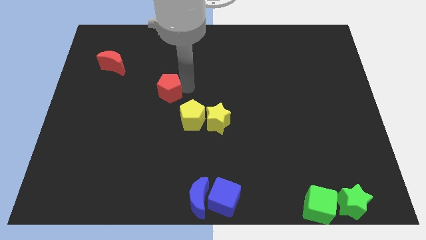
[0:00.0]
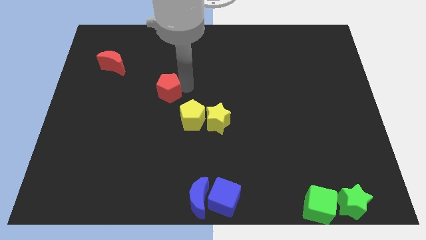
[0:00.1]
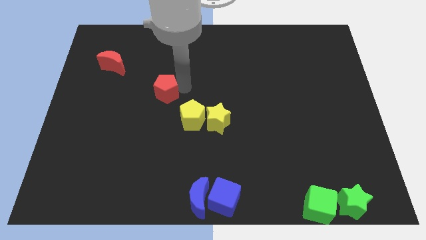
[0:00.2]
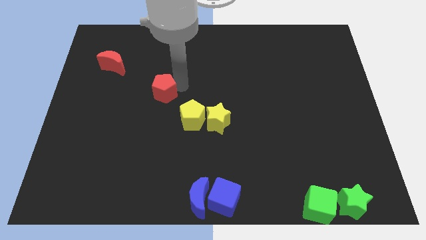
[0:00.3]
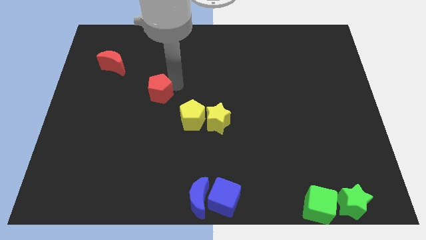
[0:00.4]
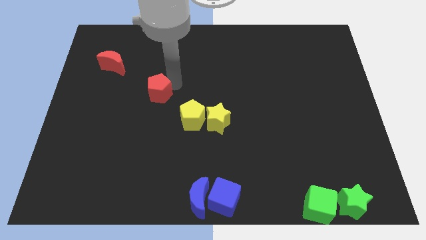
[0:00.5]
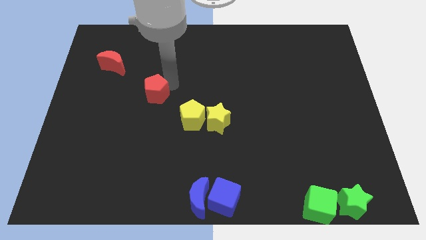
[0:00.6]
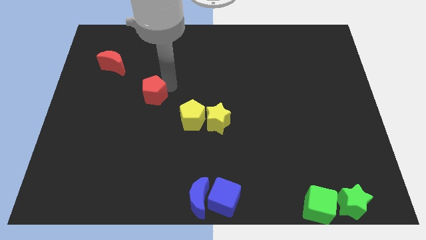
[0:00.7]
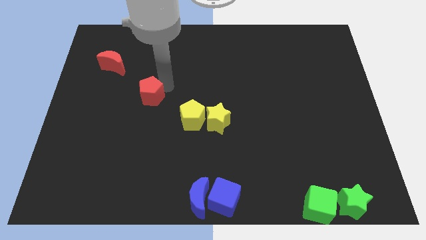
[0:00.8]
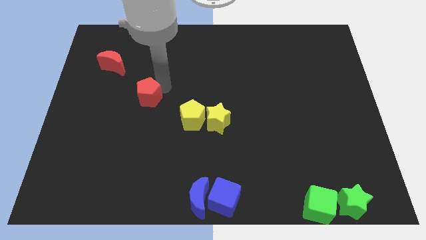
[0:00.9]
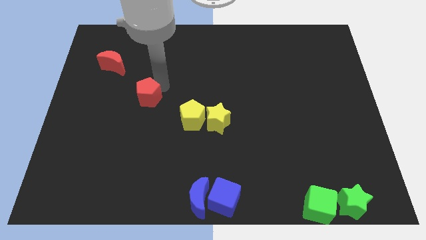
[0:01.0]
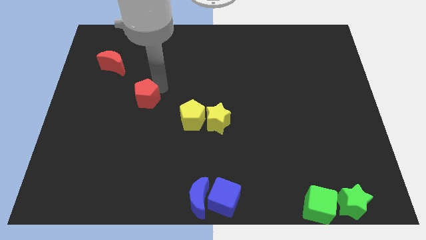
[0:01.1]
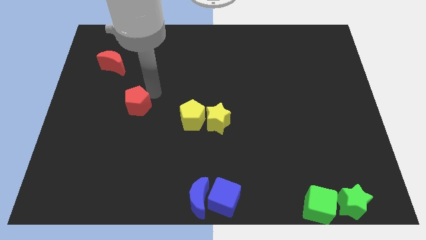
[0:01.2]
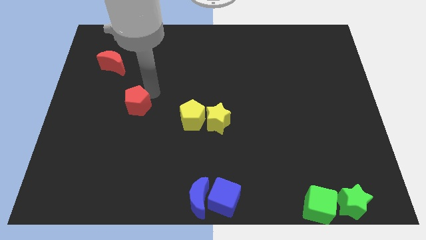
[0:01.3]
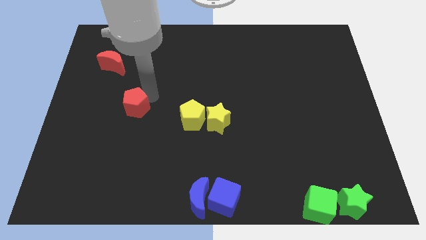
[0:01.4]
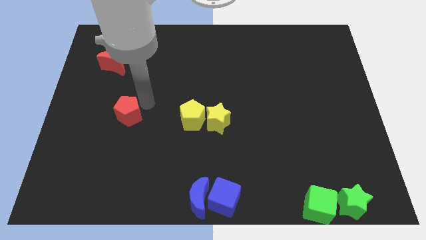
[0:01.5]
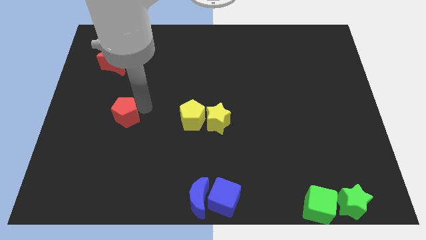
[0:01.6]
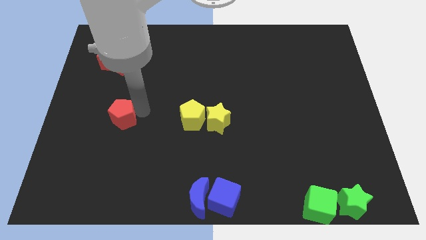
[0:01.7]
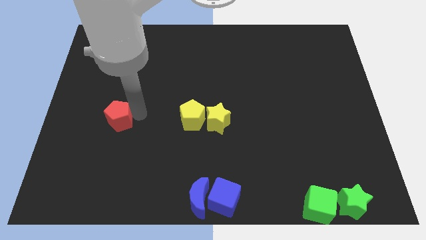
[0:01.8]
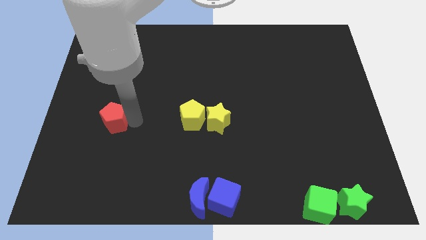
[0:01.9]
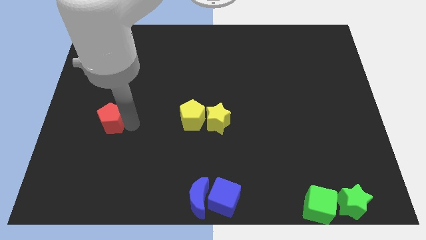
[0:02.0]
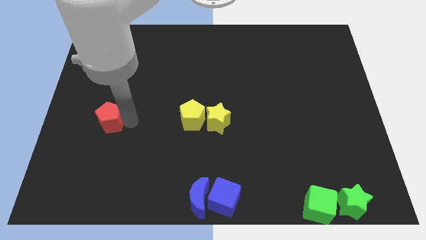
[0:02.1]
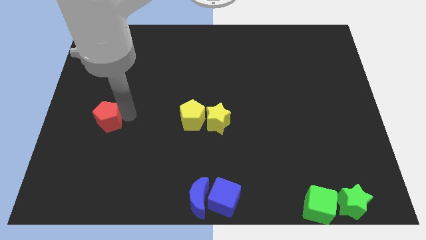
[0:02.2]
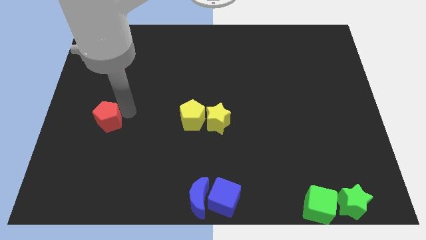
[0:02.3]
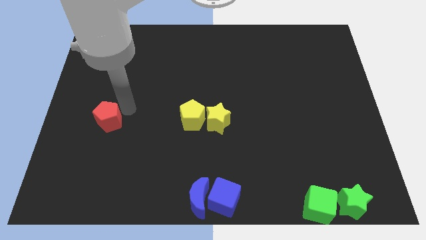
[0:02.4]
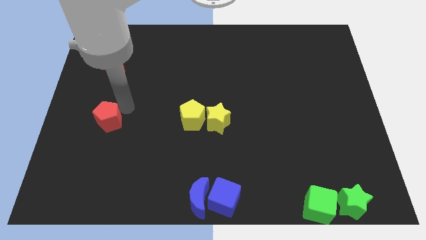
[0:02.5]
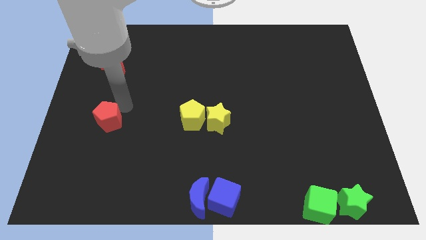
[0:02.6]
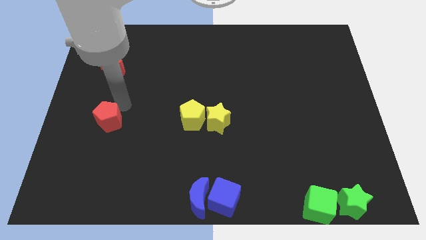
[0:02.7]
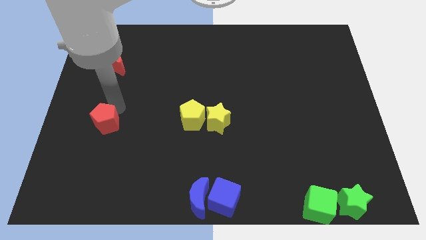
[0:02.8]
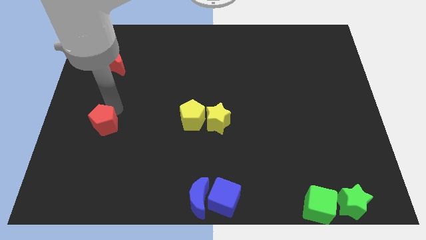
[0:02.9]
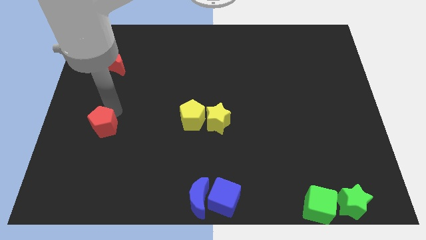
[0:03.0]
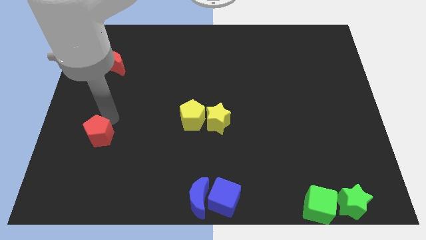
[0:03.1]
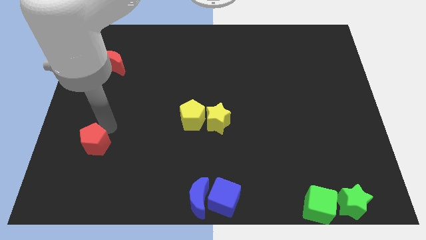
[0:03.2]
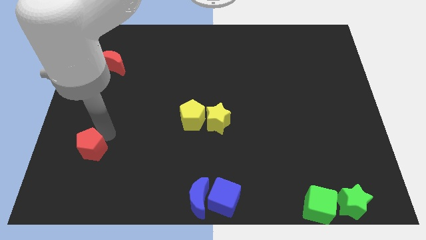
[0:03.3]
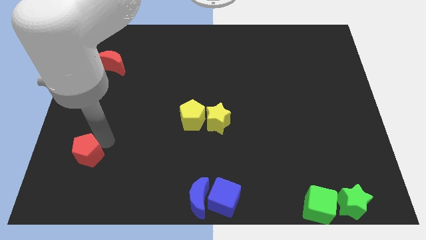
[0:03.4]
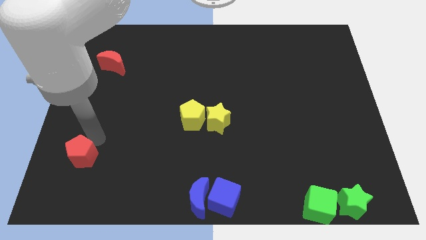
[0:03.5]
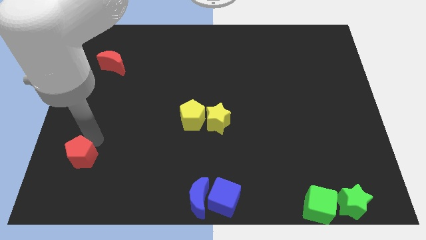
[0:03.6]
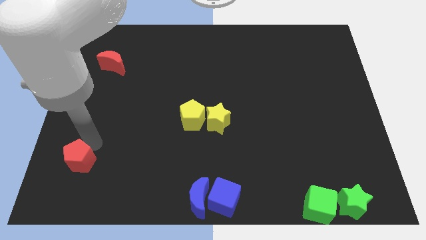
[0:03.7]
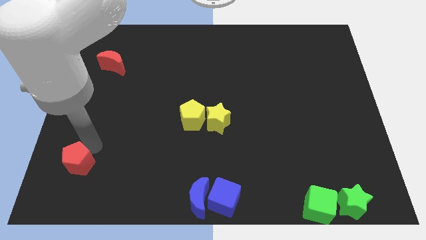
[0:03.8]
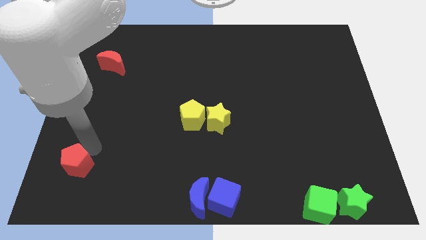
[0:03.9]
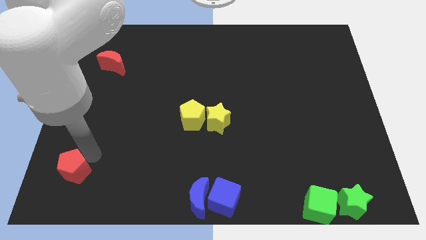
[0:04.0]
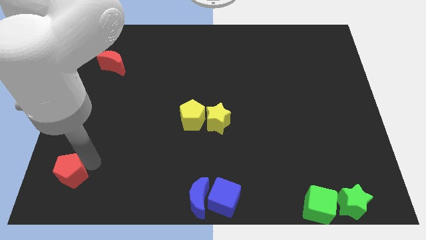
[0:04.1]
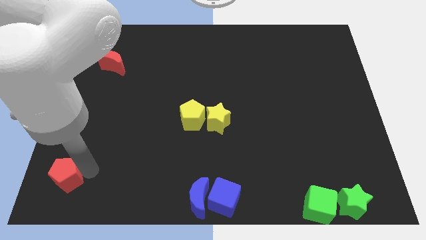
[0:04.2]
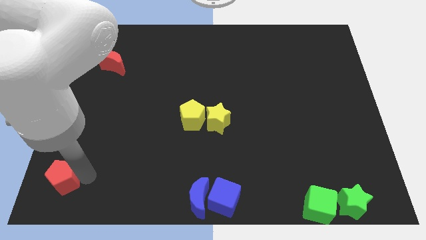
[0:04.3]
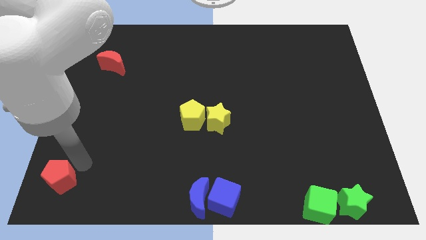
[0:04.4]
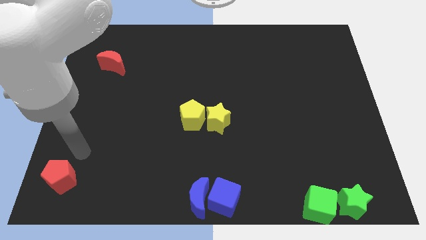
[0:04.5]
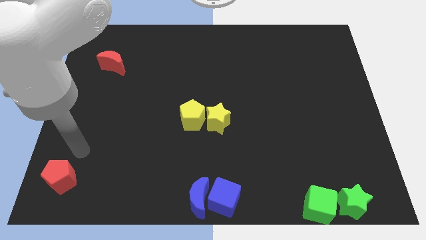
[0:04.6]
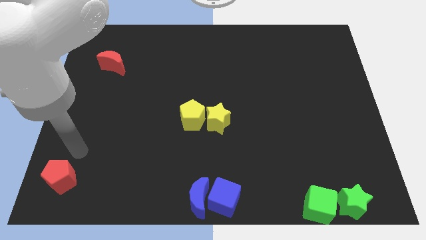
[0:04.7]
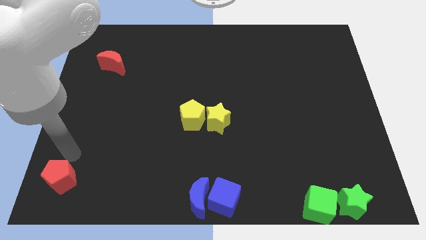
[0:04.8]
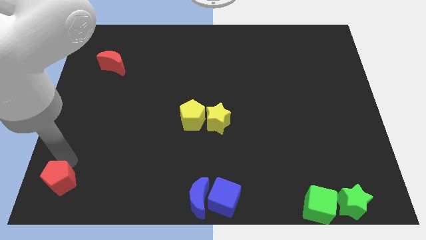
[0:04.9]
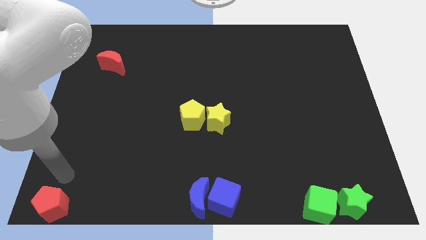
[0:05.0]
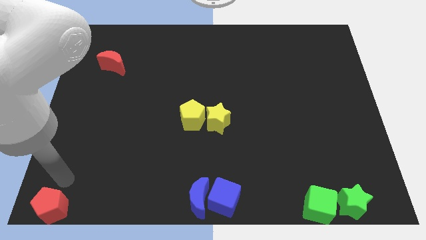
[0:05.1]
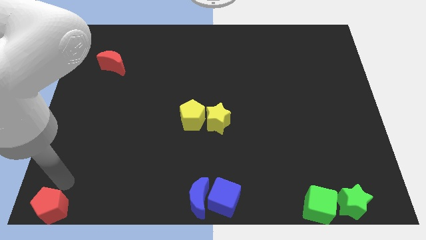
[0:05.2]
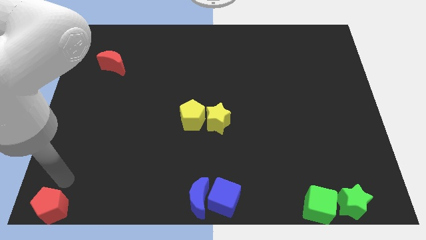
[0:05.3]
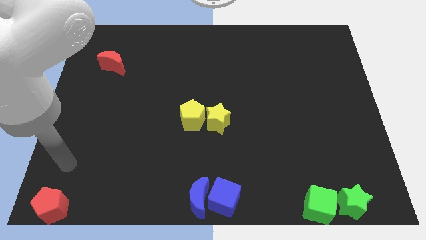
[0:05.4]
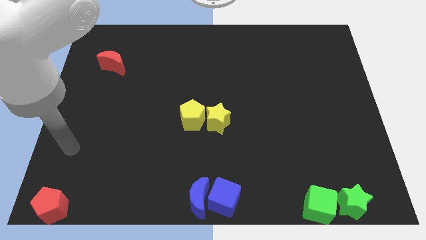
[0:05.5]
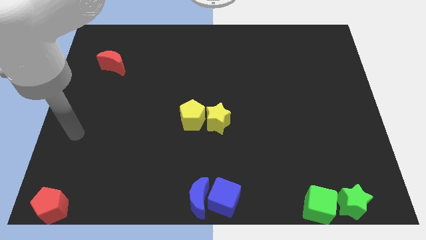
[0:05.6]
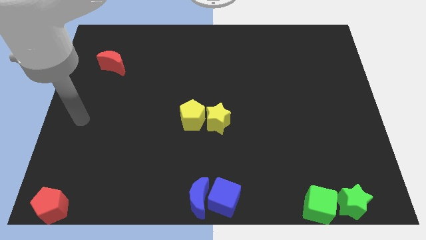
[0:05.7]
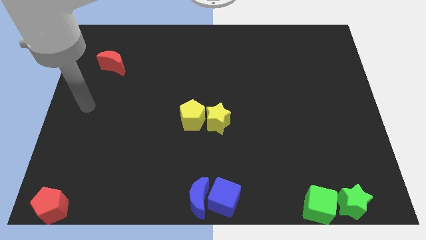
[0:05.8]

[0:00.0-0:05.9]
place the red pentagon at the bottom left corner of the board

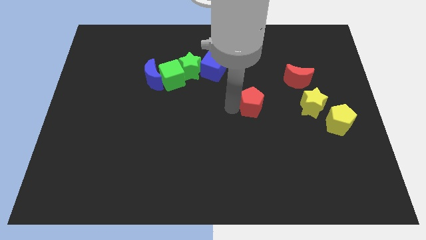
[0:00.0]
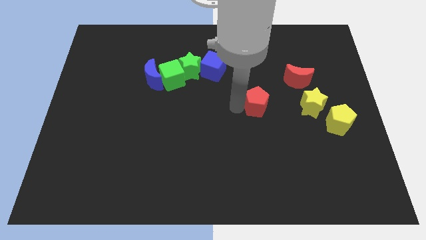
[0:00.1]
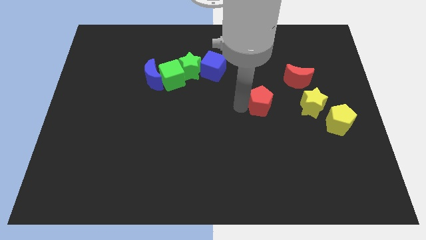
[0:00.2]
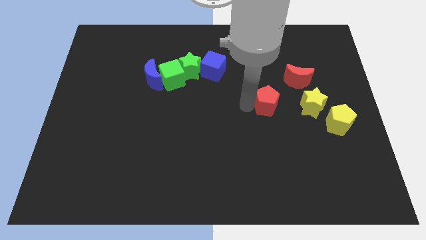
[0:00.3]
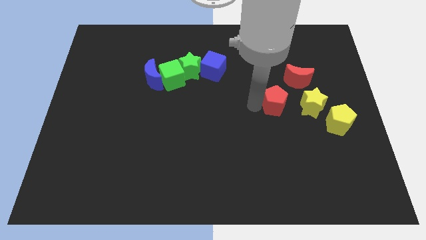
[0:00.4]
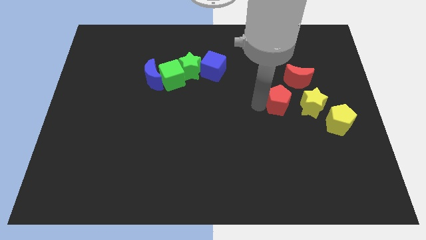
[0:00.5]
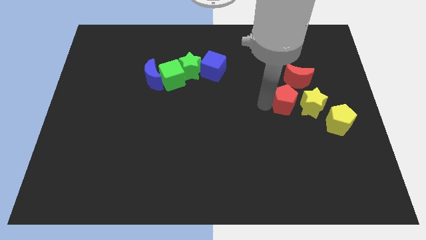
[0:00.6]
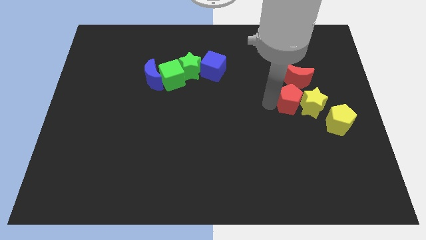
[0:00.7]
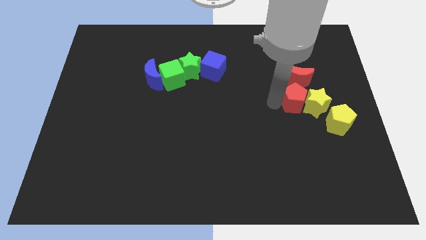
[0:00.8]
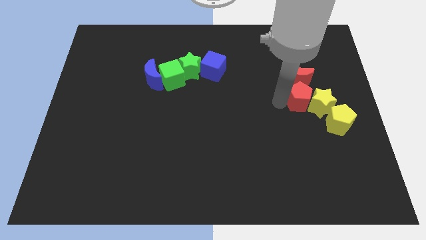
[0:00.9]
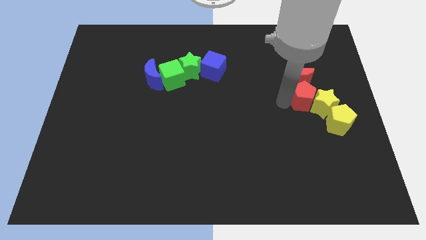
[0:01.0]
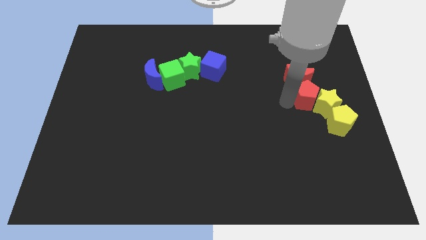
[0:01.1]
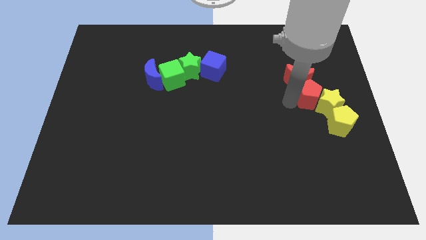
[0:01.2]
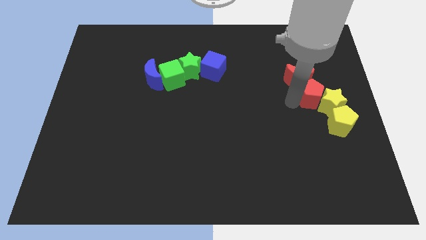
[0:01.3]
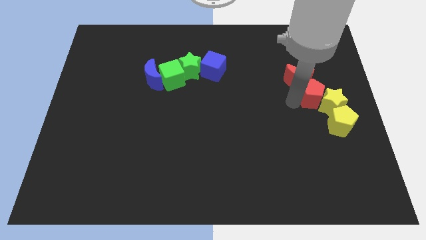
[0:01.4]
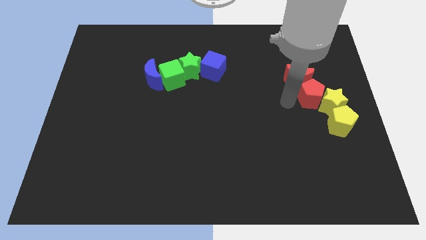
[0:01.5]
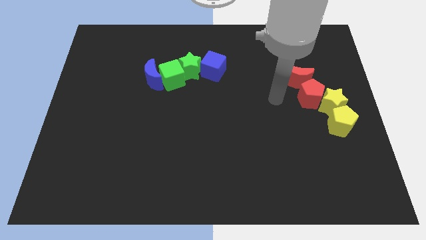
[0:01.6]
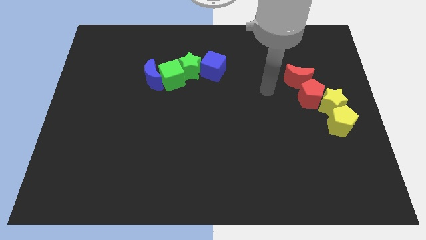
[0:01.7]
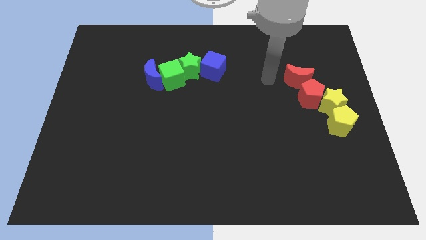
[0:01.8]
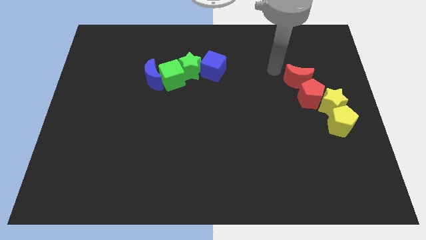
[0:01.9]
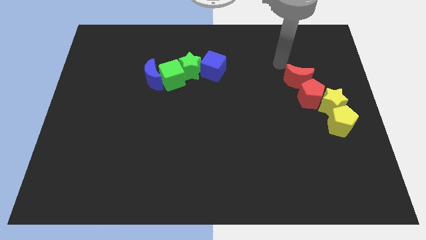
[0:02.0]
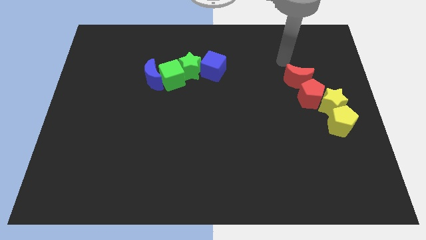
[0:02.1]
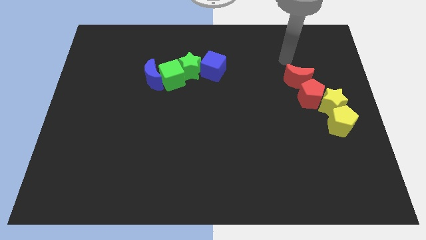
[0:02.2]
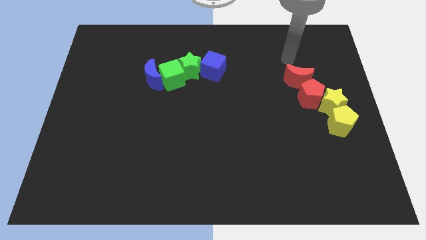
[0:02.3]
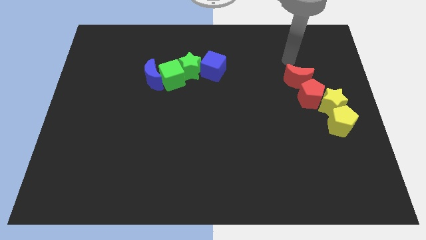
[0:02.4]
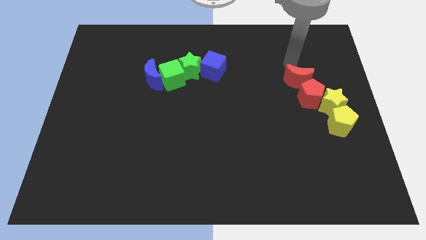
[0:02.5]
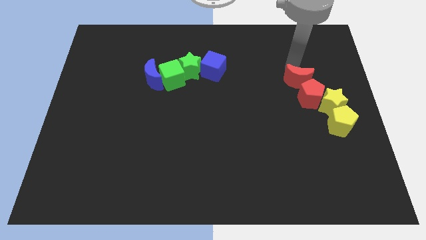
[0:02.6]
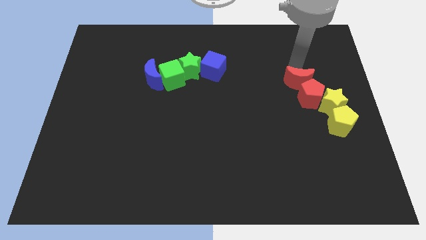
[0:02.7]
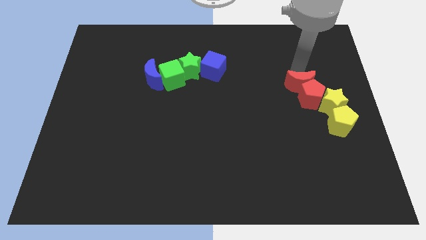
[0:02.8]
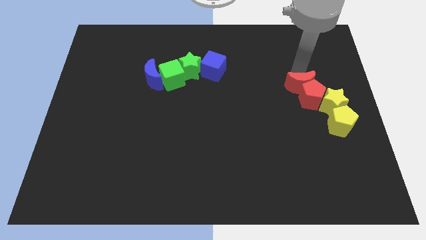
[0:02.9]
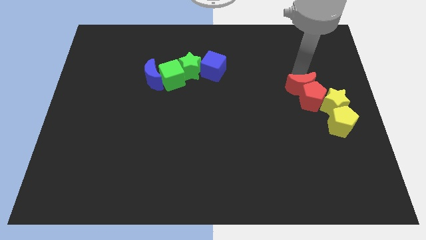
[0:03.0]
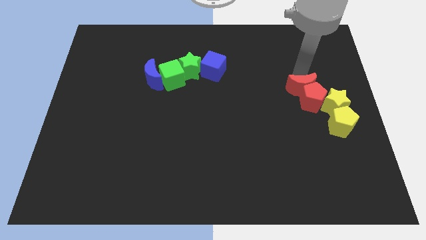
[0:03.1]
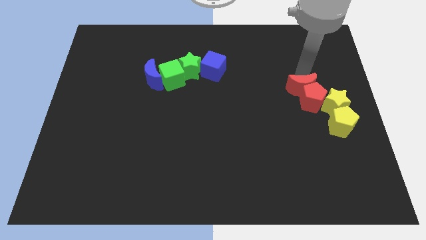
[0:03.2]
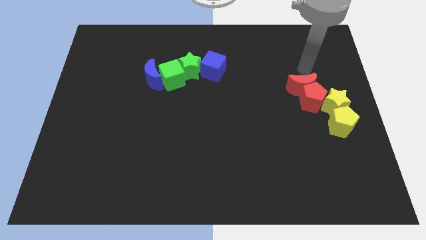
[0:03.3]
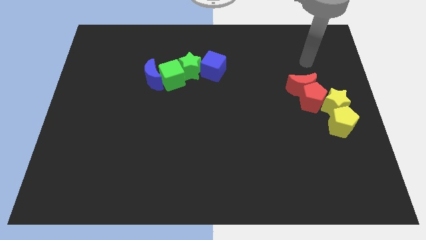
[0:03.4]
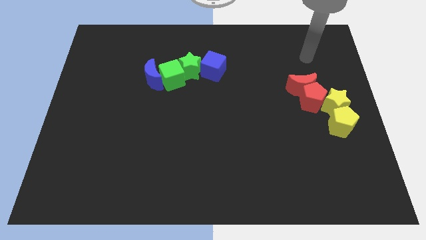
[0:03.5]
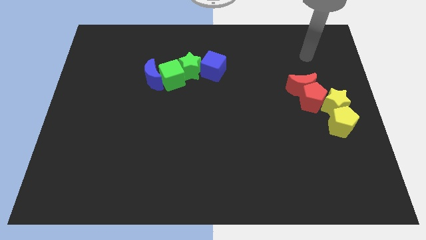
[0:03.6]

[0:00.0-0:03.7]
slide the red pentagon into the yellow star
